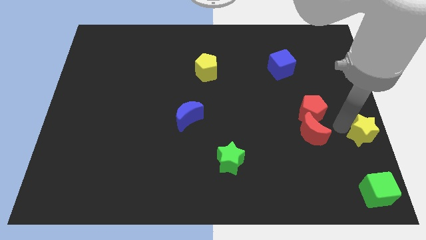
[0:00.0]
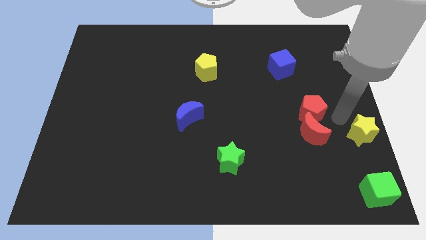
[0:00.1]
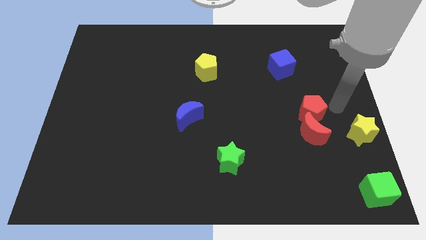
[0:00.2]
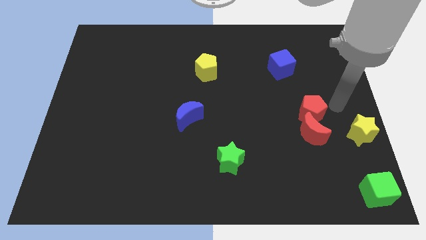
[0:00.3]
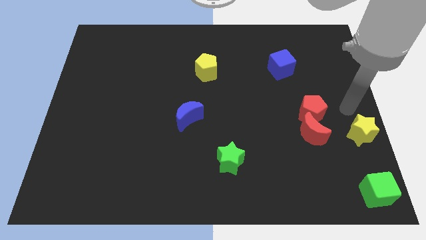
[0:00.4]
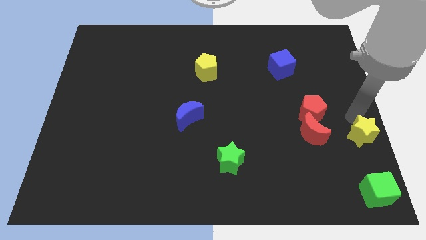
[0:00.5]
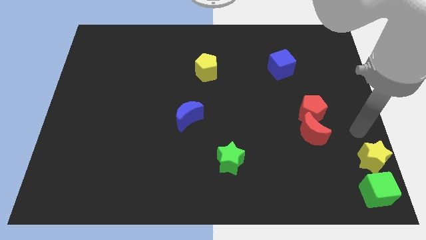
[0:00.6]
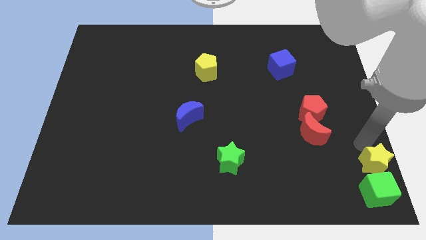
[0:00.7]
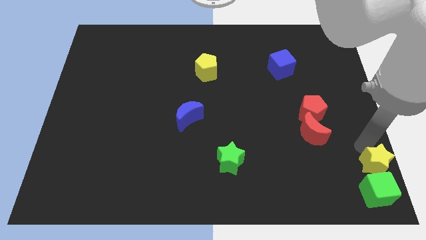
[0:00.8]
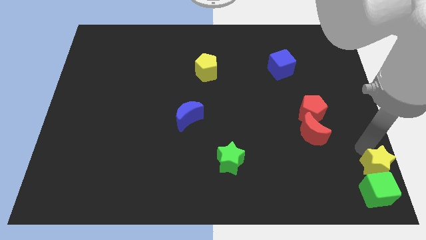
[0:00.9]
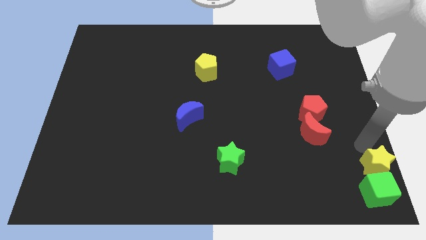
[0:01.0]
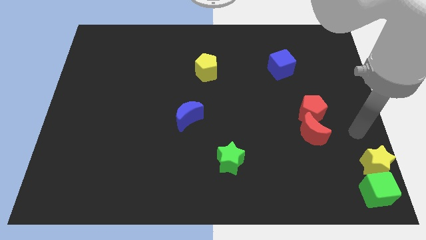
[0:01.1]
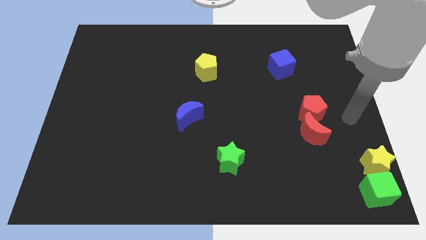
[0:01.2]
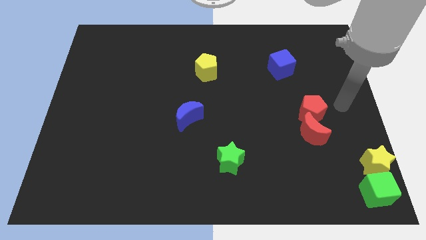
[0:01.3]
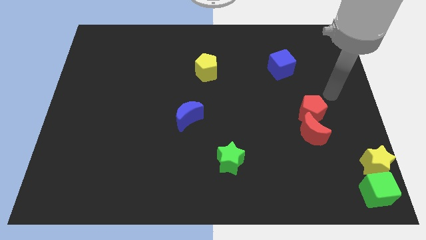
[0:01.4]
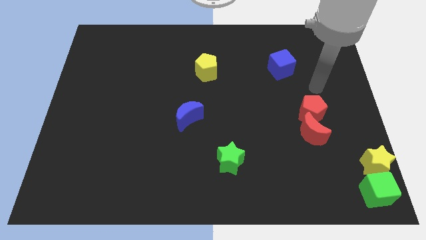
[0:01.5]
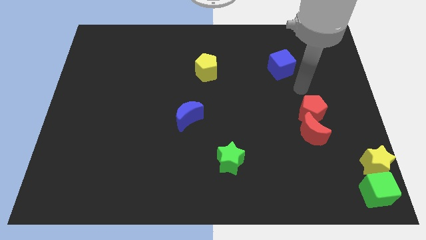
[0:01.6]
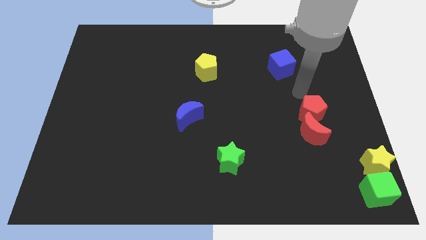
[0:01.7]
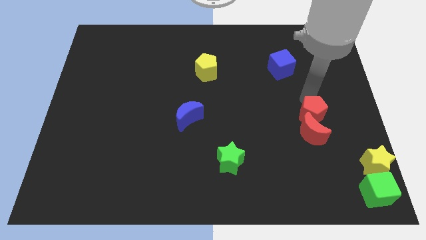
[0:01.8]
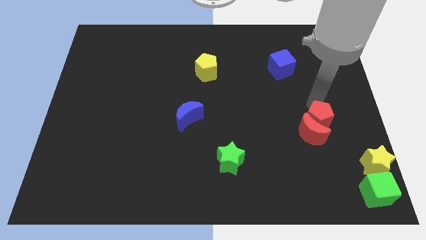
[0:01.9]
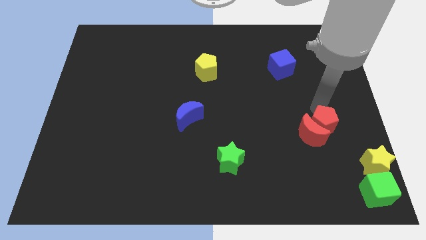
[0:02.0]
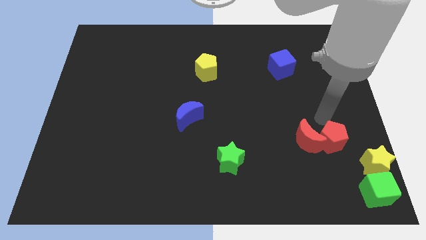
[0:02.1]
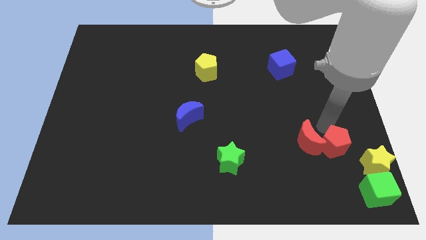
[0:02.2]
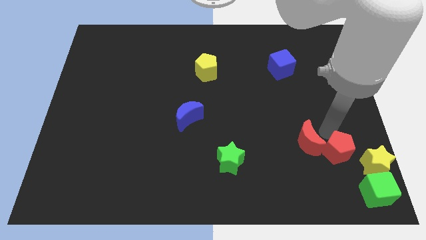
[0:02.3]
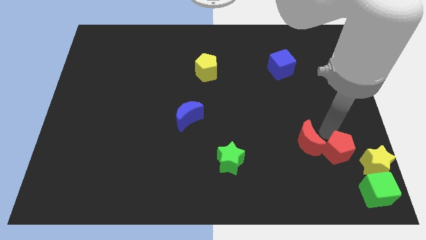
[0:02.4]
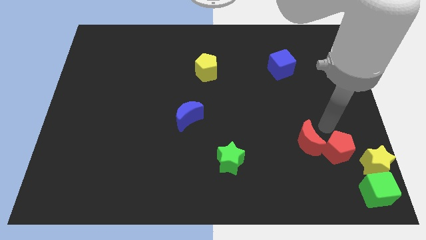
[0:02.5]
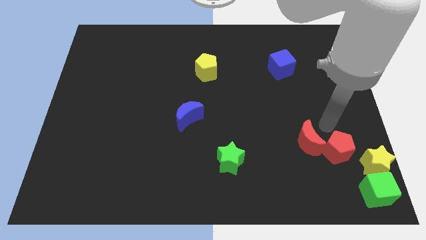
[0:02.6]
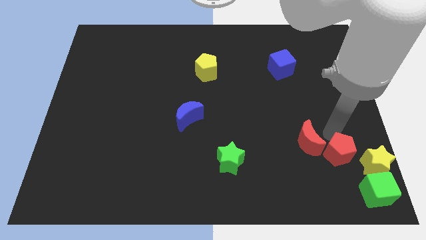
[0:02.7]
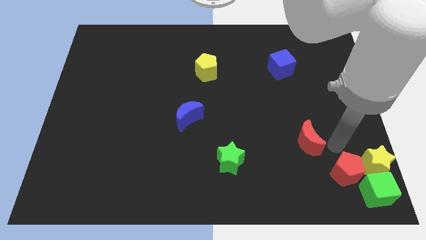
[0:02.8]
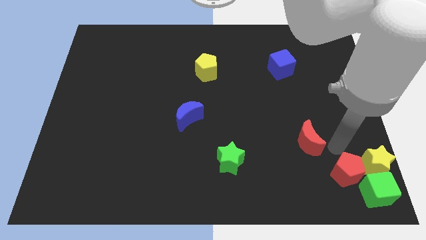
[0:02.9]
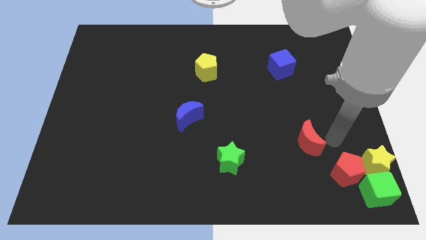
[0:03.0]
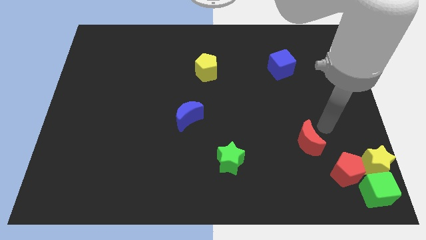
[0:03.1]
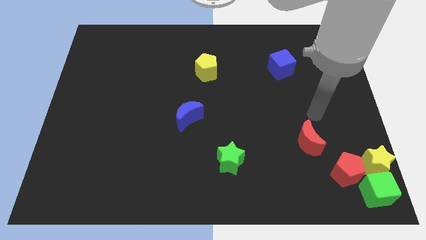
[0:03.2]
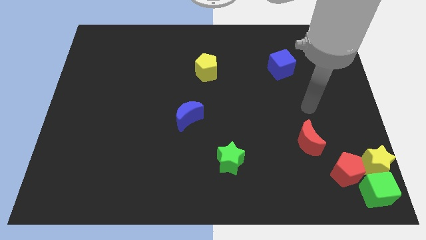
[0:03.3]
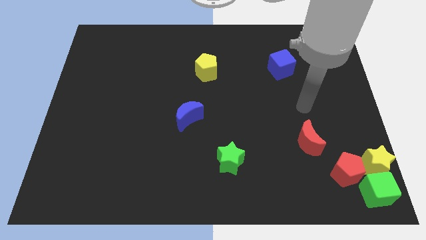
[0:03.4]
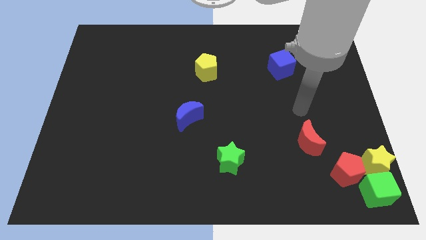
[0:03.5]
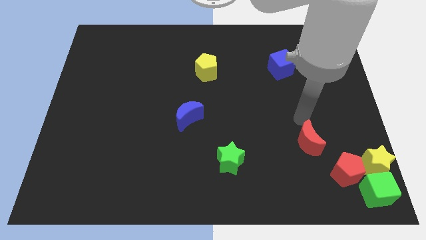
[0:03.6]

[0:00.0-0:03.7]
place the red pentagon to the left of yellow star

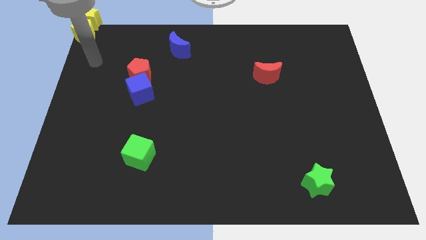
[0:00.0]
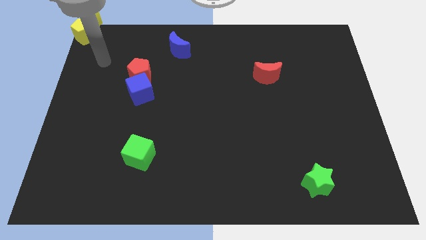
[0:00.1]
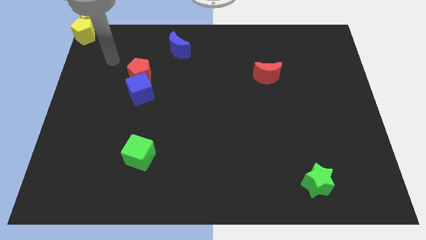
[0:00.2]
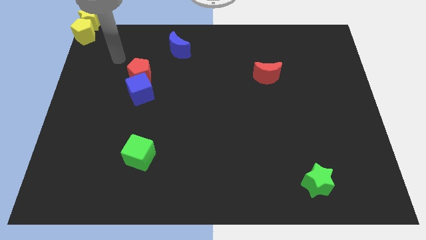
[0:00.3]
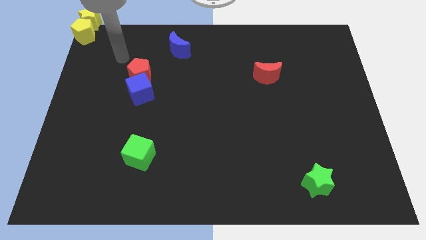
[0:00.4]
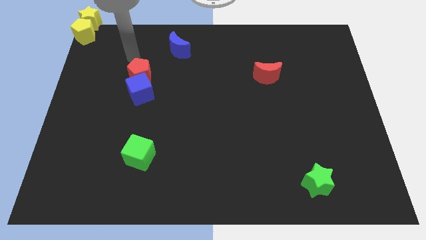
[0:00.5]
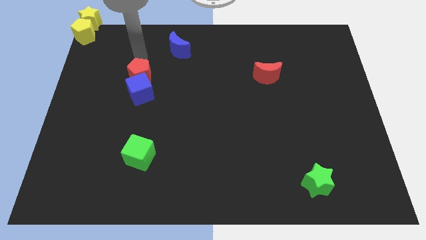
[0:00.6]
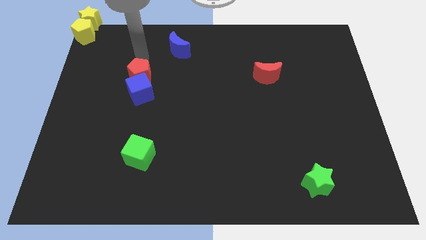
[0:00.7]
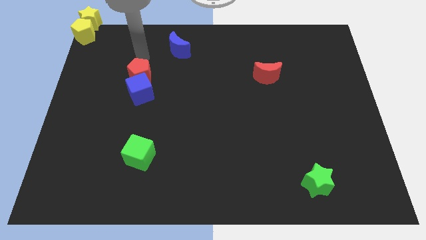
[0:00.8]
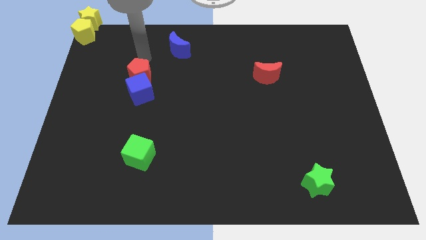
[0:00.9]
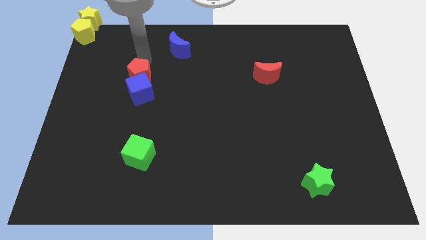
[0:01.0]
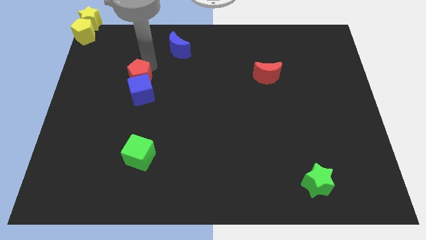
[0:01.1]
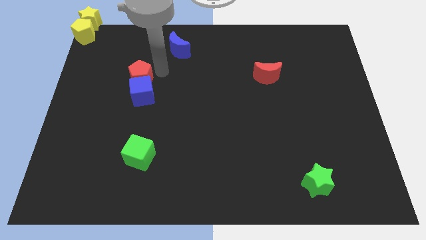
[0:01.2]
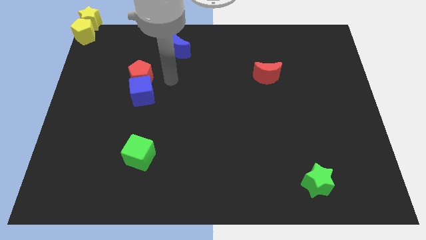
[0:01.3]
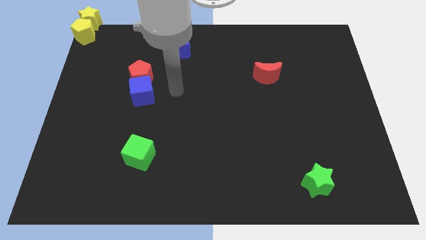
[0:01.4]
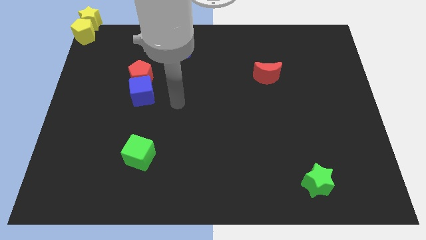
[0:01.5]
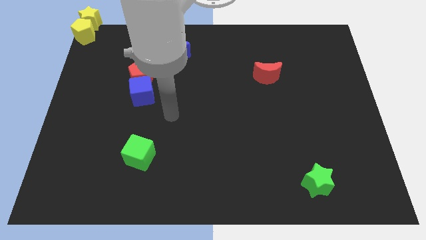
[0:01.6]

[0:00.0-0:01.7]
move your arm to the right of the blue cube

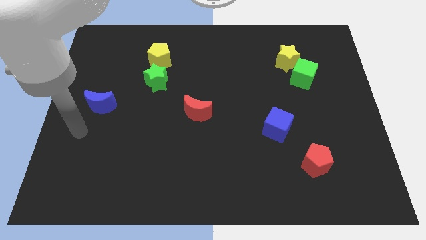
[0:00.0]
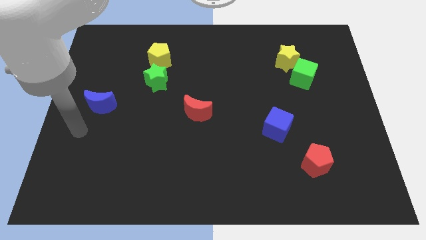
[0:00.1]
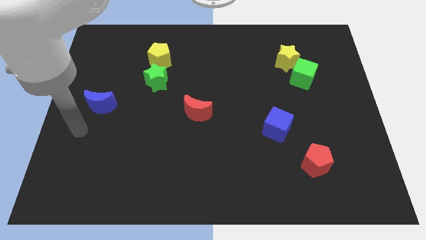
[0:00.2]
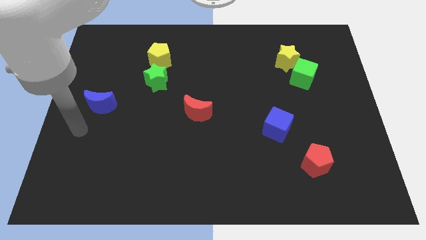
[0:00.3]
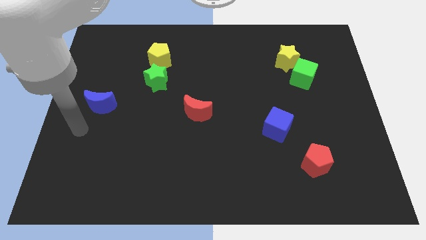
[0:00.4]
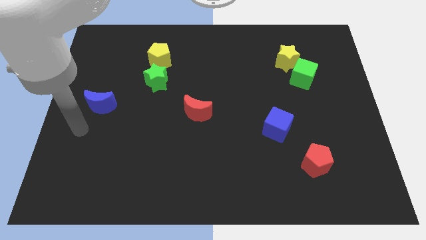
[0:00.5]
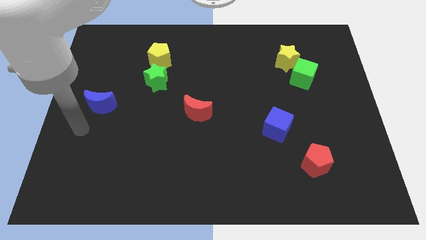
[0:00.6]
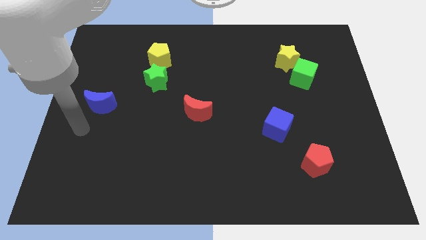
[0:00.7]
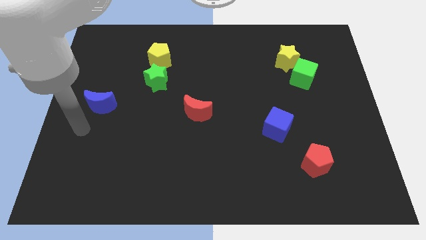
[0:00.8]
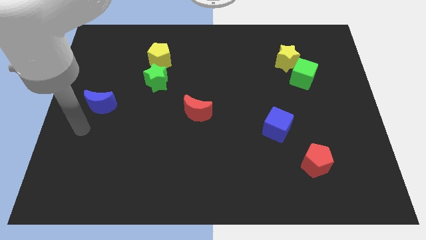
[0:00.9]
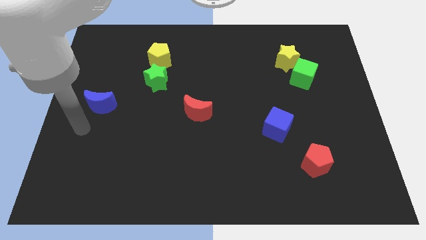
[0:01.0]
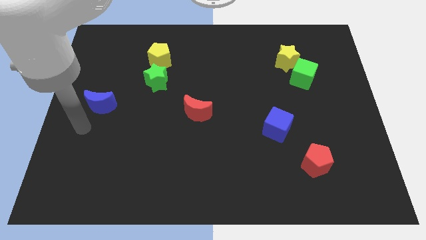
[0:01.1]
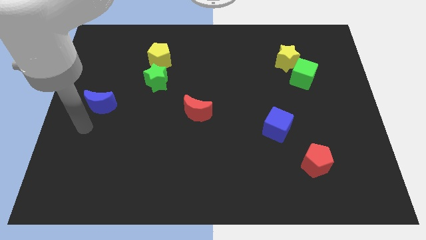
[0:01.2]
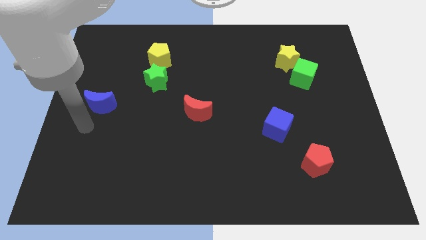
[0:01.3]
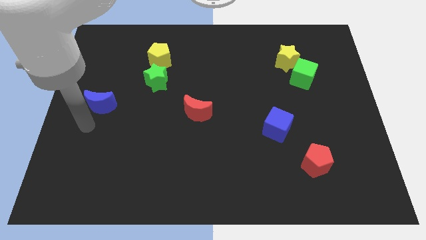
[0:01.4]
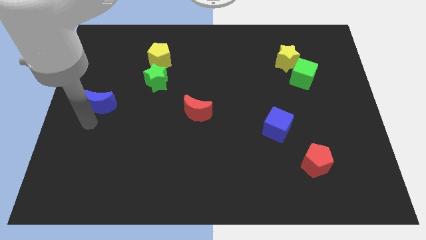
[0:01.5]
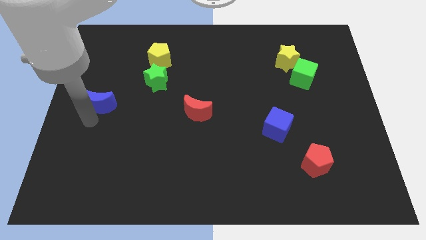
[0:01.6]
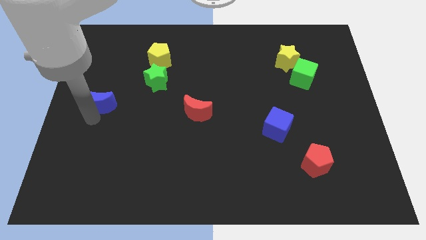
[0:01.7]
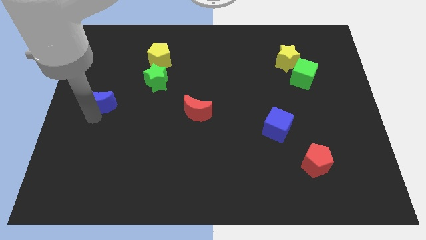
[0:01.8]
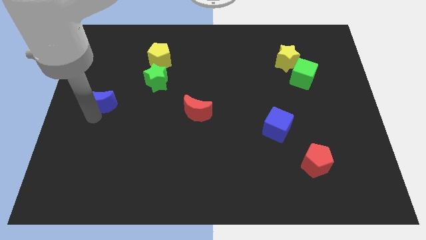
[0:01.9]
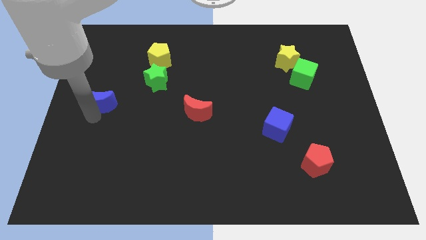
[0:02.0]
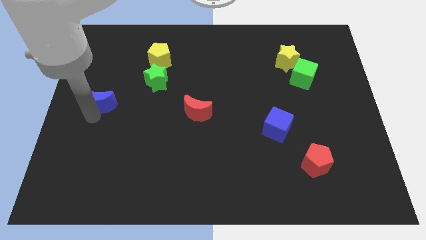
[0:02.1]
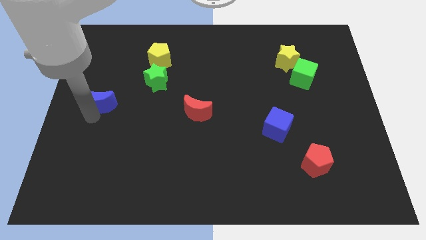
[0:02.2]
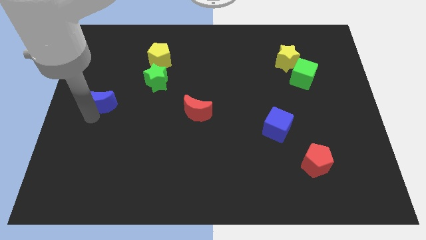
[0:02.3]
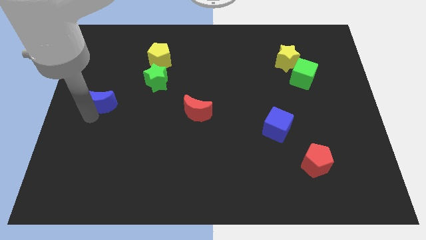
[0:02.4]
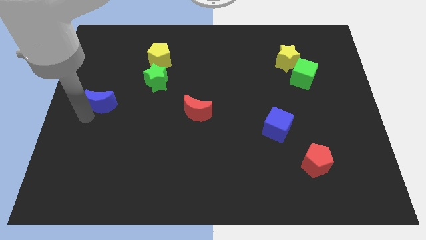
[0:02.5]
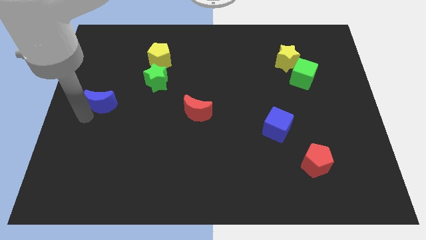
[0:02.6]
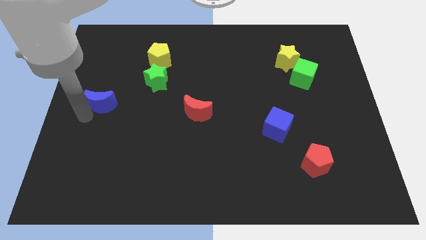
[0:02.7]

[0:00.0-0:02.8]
move your arm near the blue moon

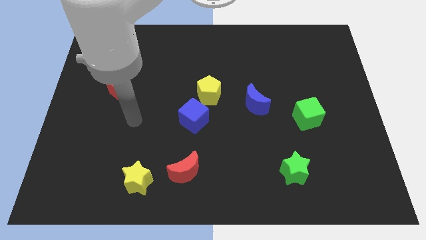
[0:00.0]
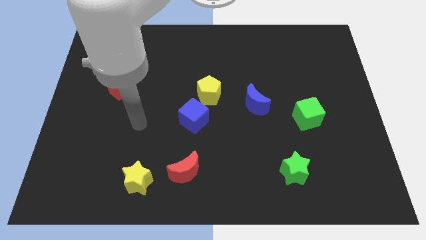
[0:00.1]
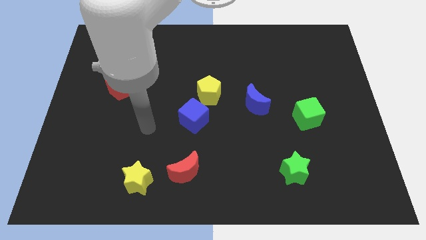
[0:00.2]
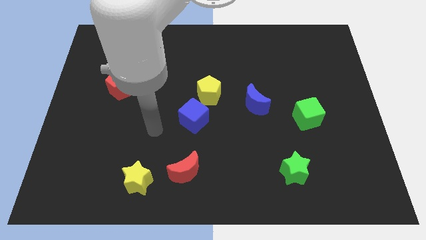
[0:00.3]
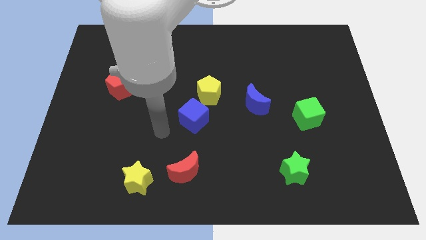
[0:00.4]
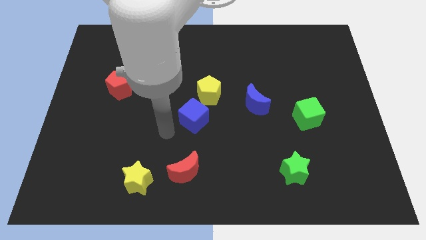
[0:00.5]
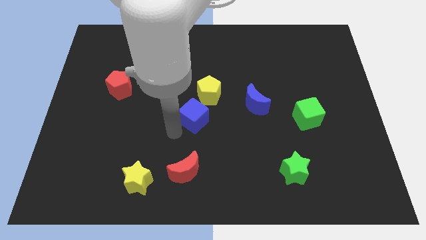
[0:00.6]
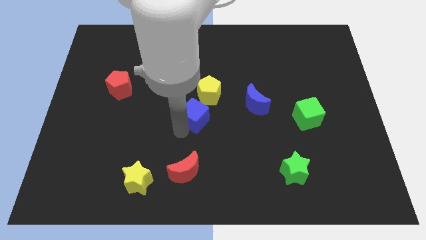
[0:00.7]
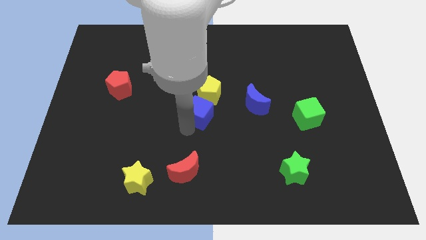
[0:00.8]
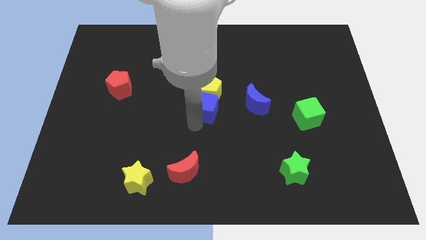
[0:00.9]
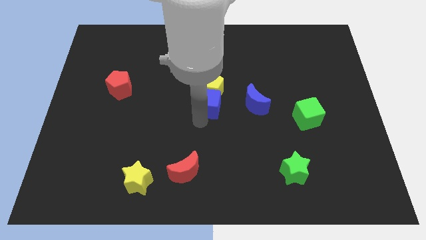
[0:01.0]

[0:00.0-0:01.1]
point your arm below blue cube
